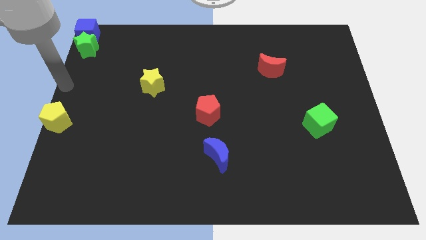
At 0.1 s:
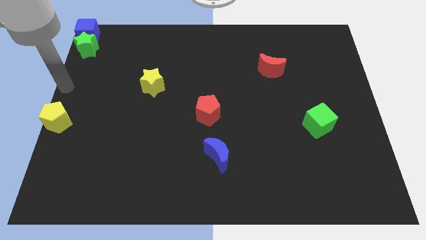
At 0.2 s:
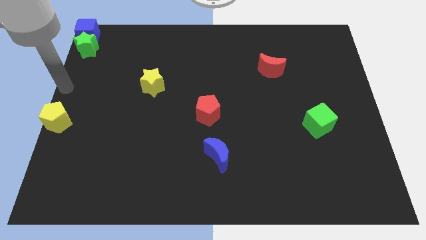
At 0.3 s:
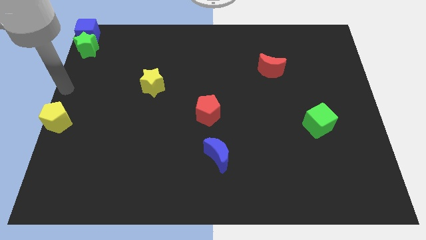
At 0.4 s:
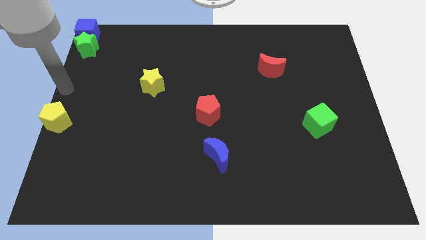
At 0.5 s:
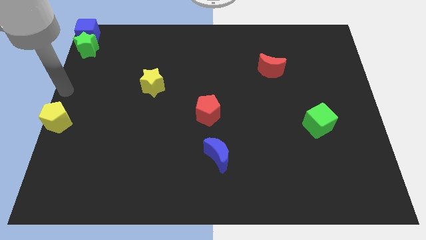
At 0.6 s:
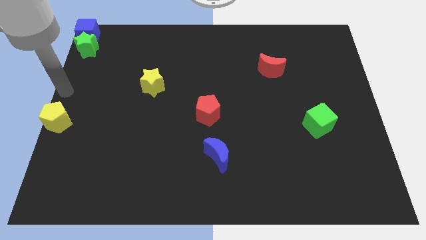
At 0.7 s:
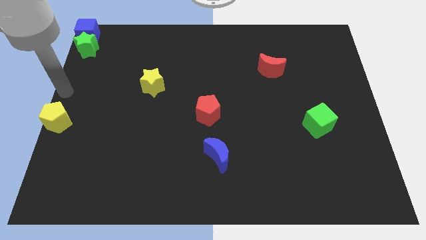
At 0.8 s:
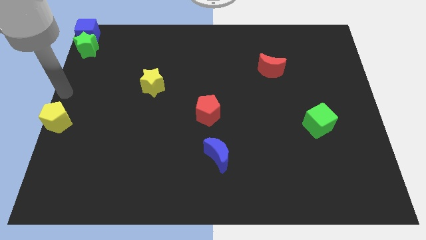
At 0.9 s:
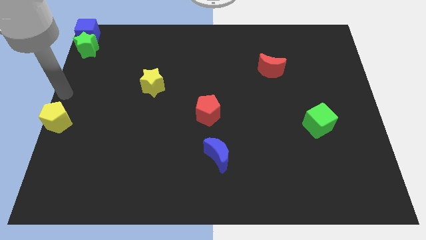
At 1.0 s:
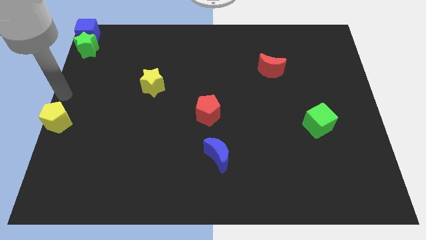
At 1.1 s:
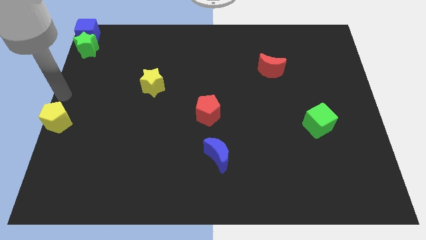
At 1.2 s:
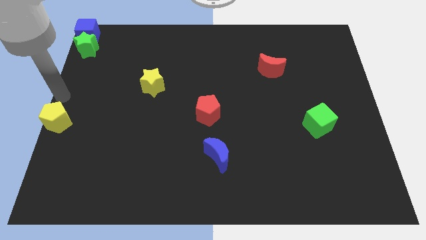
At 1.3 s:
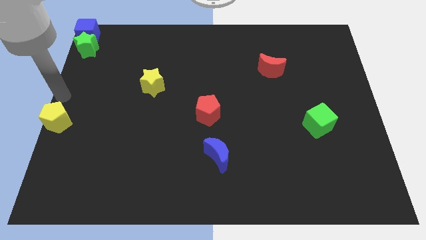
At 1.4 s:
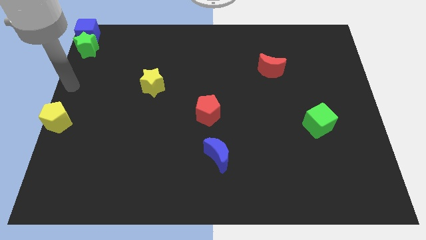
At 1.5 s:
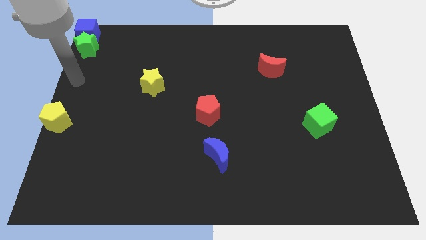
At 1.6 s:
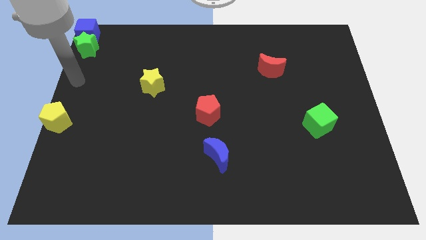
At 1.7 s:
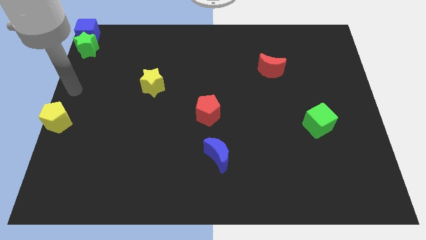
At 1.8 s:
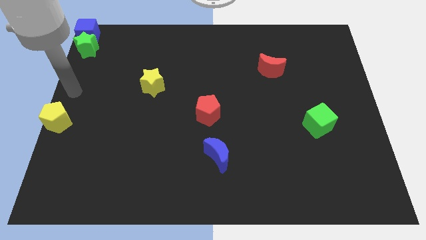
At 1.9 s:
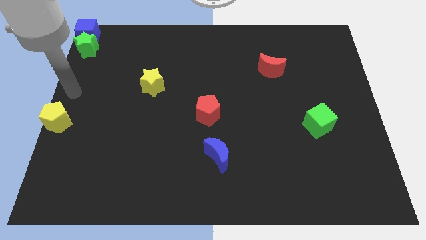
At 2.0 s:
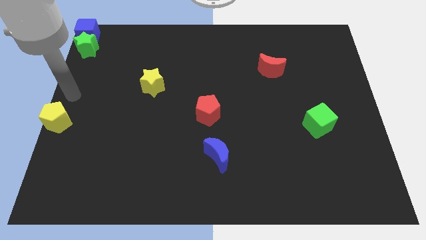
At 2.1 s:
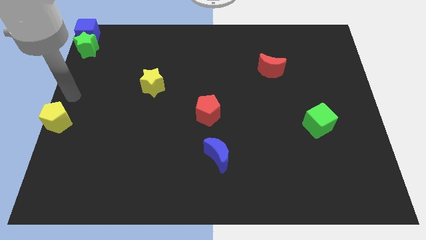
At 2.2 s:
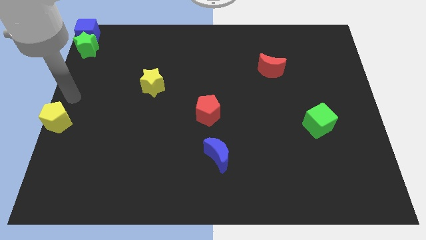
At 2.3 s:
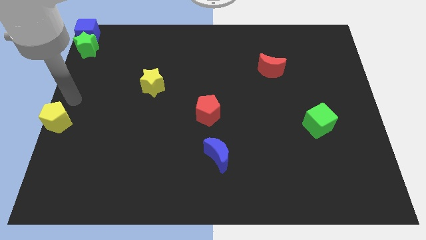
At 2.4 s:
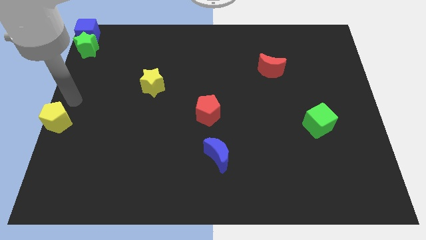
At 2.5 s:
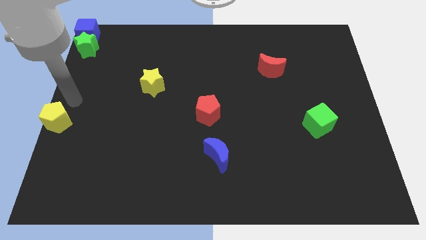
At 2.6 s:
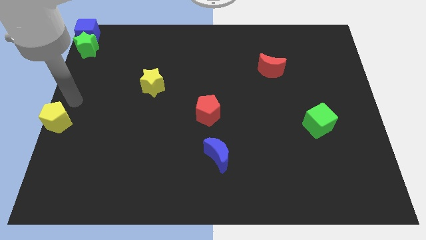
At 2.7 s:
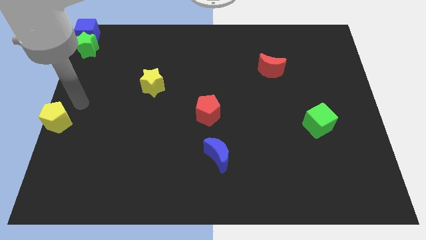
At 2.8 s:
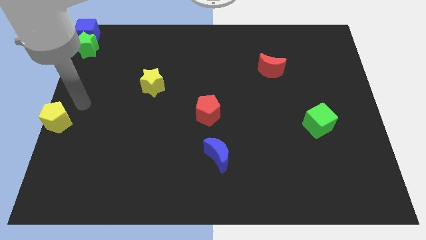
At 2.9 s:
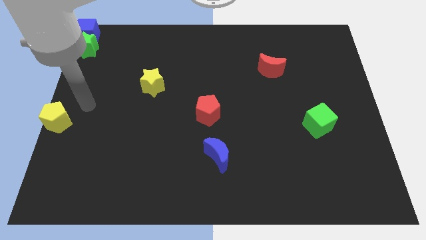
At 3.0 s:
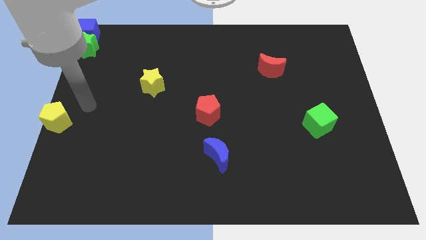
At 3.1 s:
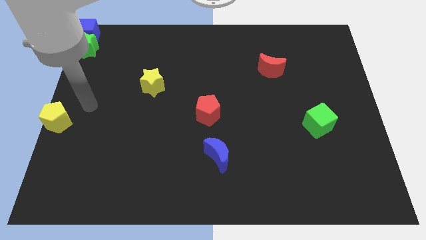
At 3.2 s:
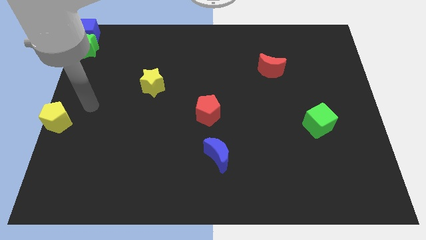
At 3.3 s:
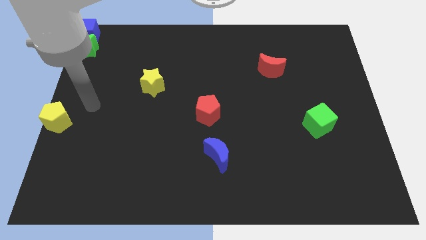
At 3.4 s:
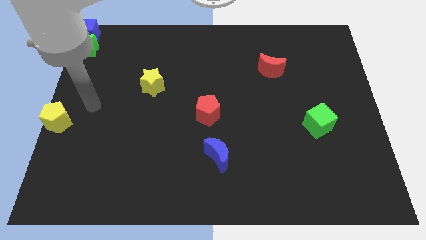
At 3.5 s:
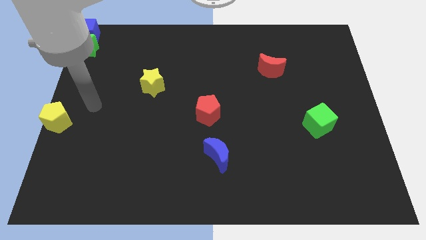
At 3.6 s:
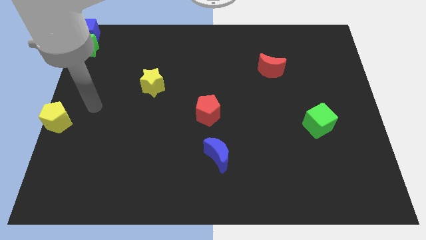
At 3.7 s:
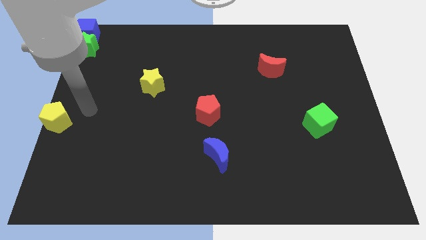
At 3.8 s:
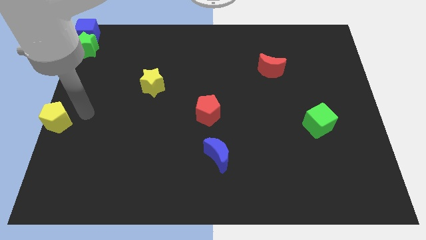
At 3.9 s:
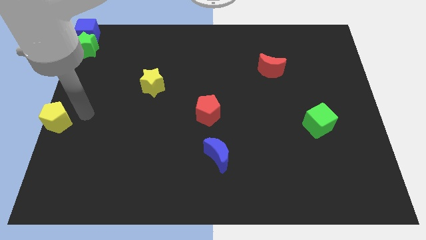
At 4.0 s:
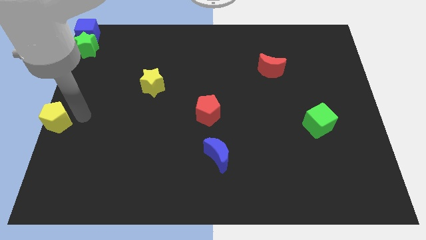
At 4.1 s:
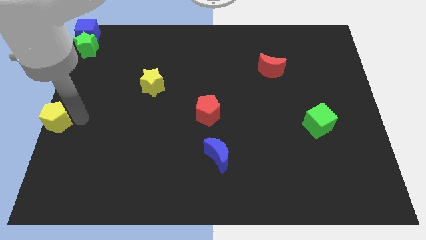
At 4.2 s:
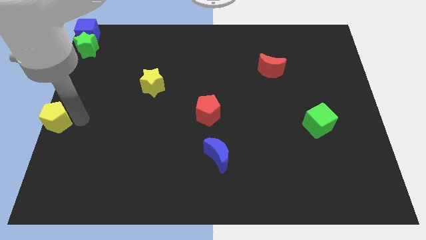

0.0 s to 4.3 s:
place your arm right of the yellow pentagon

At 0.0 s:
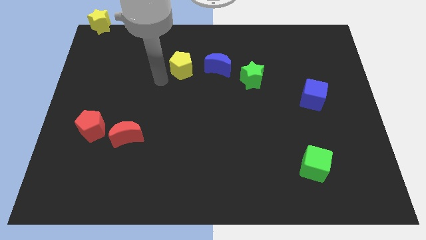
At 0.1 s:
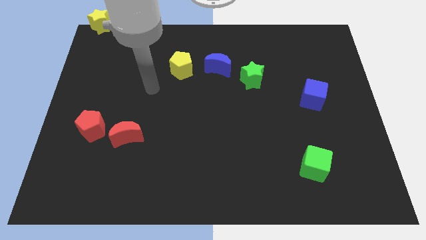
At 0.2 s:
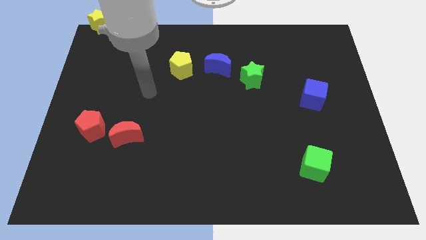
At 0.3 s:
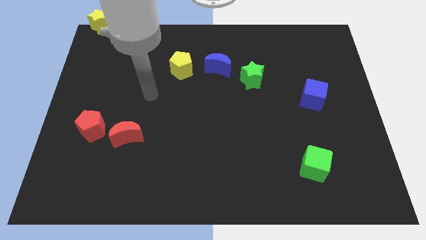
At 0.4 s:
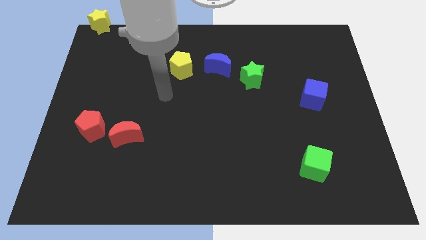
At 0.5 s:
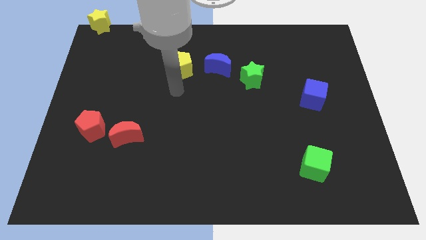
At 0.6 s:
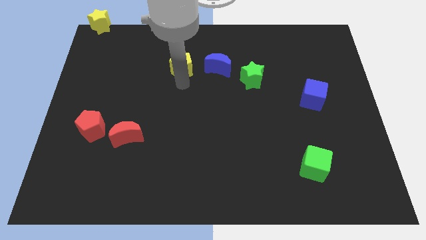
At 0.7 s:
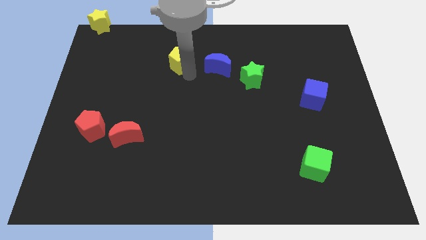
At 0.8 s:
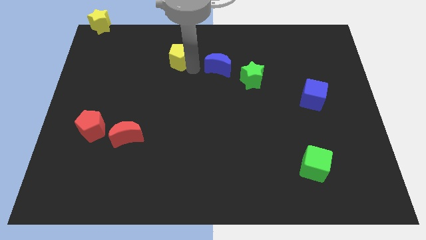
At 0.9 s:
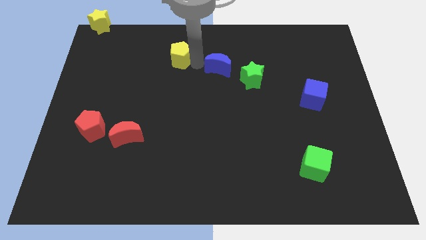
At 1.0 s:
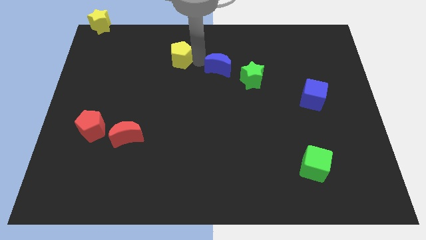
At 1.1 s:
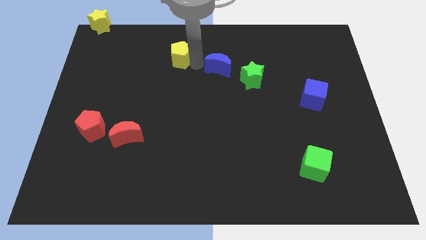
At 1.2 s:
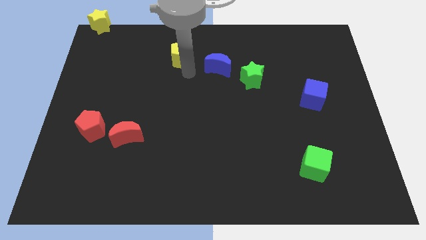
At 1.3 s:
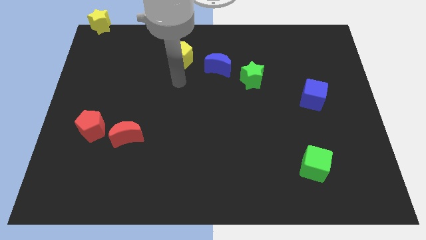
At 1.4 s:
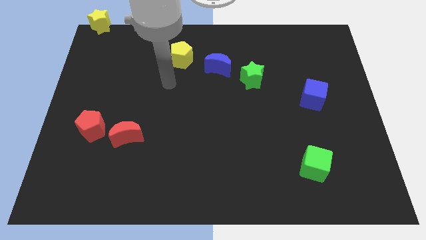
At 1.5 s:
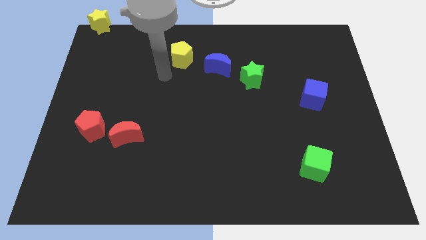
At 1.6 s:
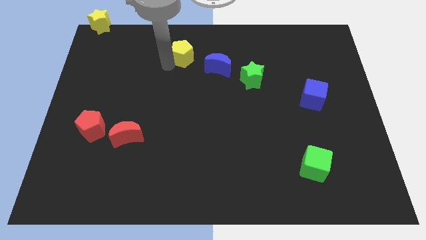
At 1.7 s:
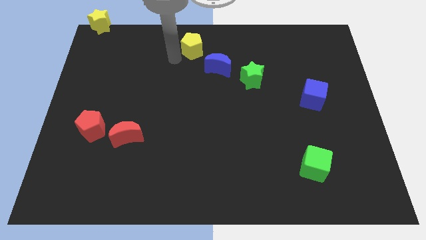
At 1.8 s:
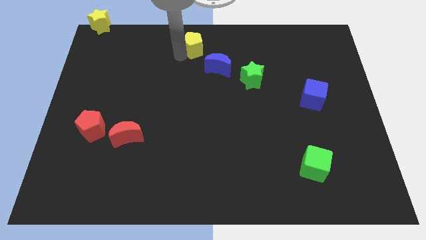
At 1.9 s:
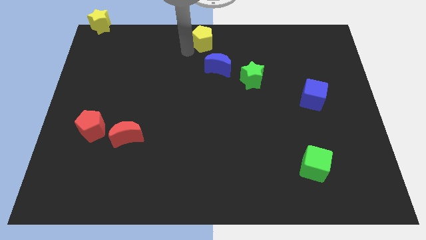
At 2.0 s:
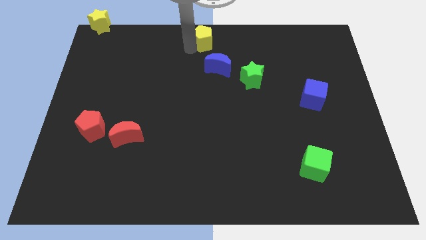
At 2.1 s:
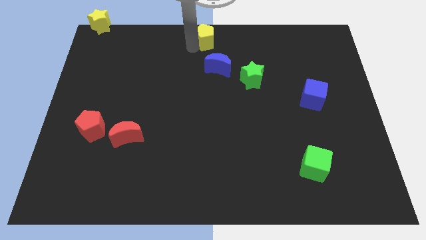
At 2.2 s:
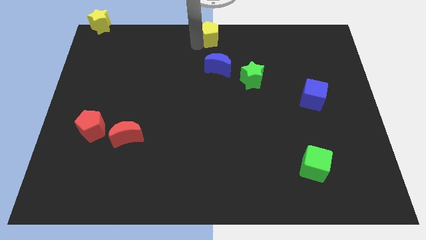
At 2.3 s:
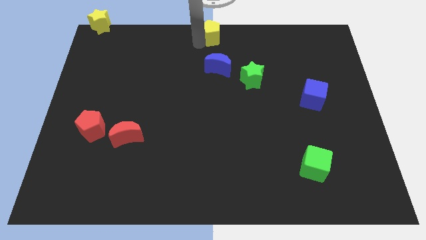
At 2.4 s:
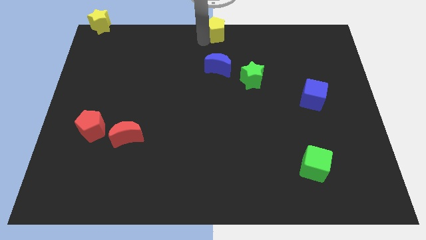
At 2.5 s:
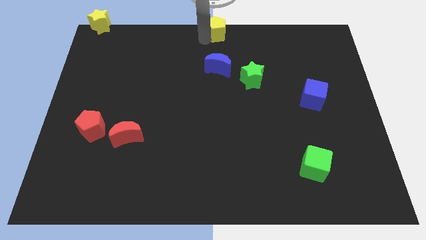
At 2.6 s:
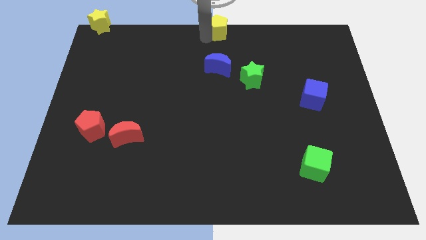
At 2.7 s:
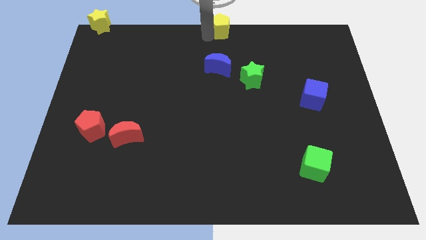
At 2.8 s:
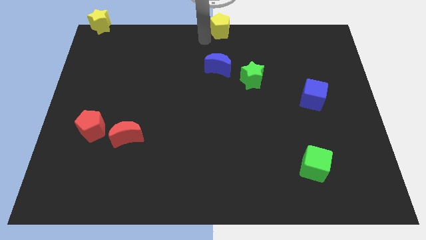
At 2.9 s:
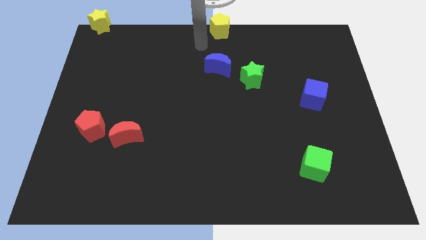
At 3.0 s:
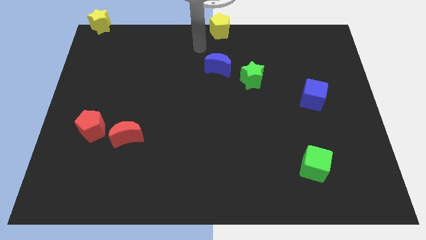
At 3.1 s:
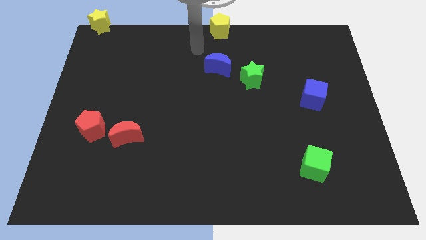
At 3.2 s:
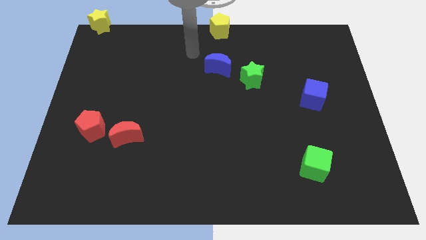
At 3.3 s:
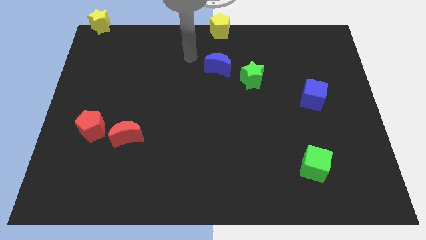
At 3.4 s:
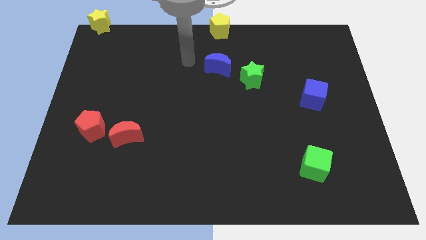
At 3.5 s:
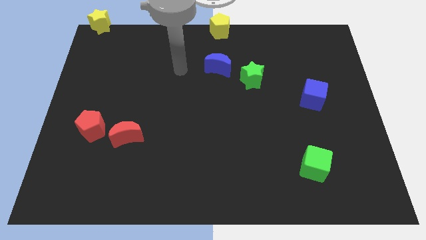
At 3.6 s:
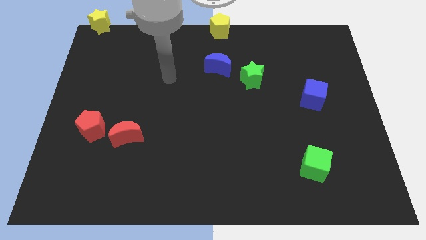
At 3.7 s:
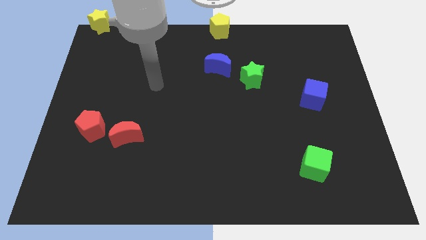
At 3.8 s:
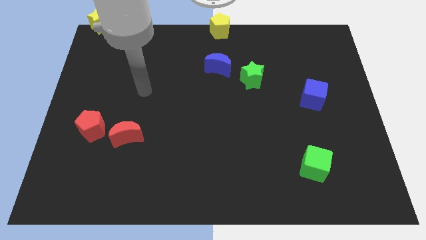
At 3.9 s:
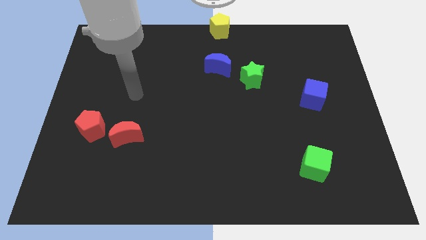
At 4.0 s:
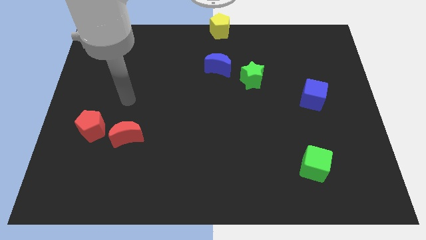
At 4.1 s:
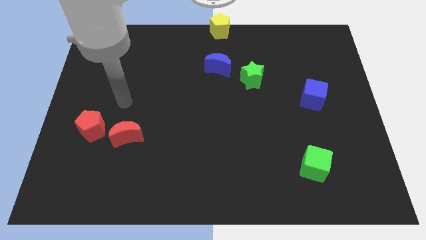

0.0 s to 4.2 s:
place yellow pentagon to the top center of the board

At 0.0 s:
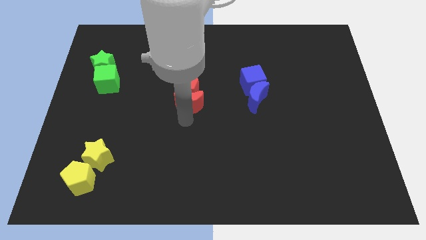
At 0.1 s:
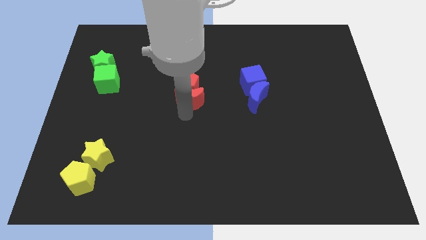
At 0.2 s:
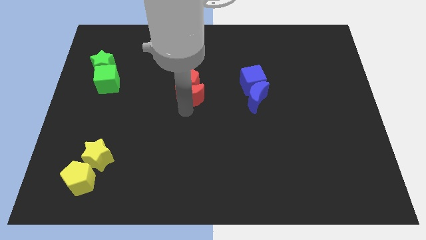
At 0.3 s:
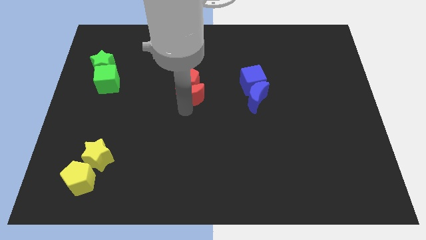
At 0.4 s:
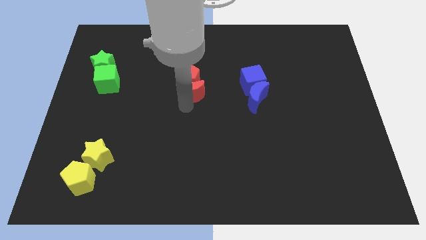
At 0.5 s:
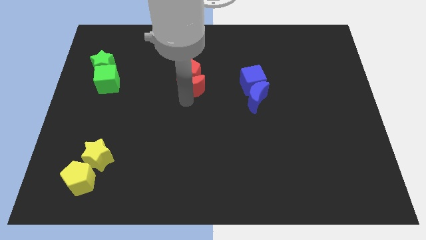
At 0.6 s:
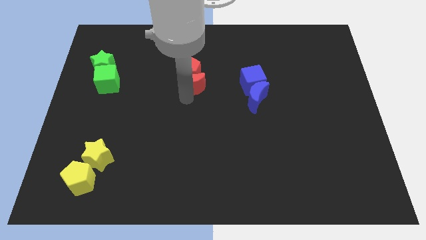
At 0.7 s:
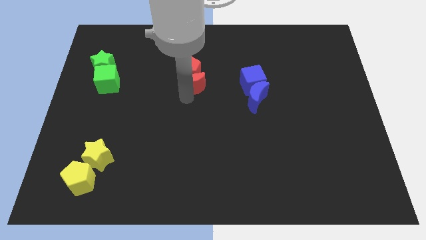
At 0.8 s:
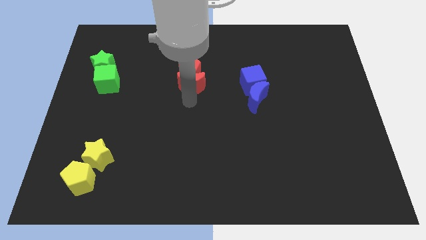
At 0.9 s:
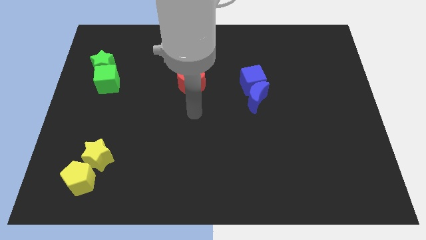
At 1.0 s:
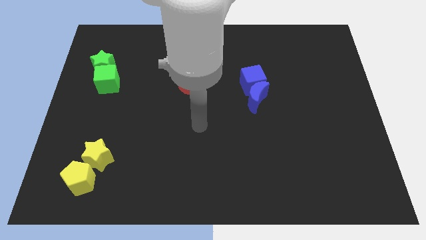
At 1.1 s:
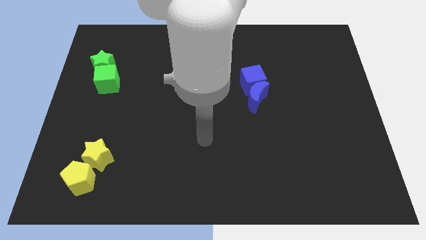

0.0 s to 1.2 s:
move the red crescent along with the red pentagon slightly towards top of the board
